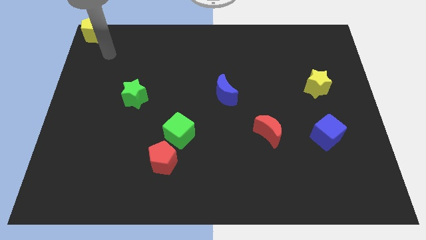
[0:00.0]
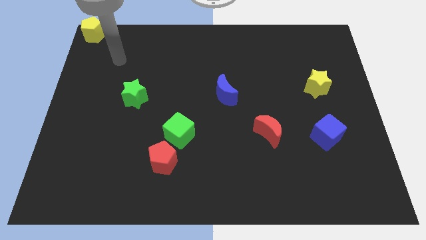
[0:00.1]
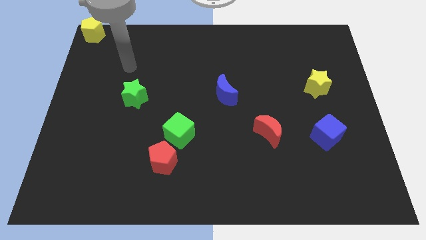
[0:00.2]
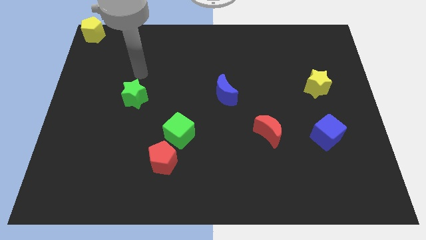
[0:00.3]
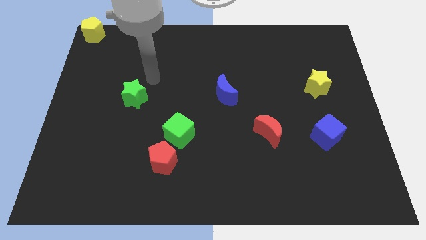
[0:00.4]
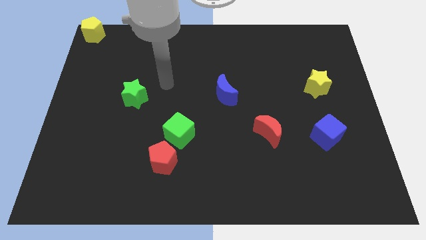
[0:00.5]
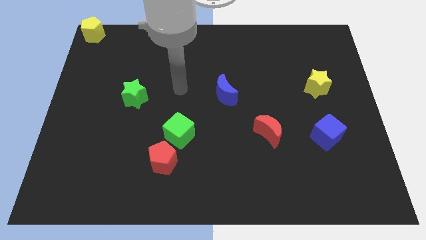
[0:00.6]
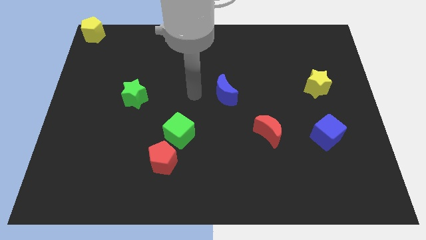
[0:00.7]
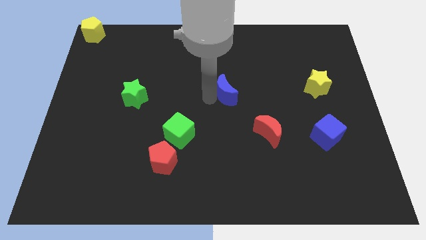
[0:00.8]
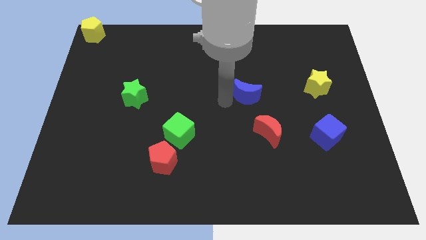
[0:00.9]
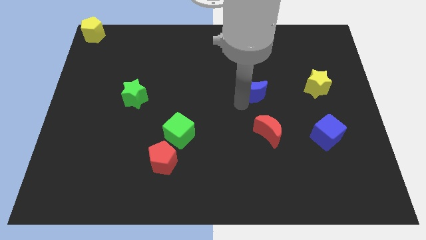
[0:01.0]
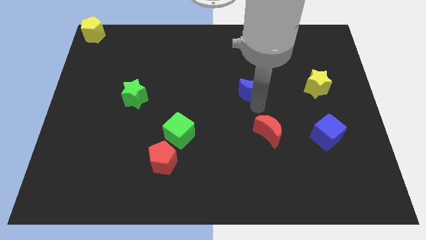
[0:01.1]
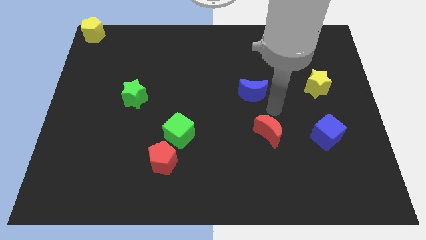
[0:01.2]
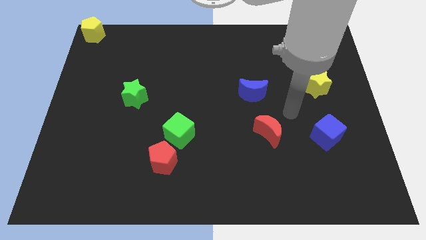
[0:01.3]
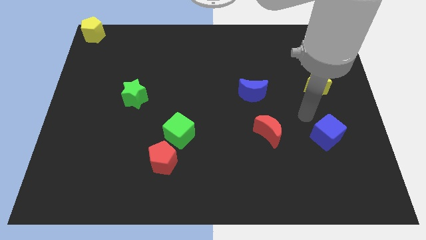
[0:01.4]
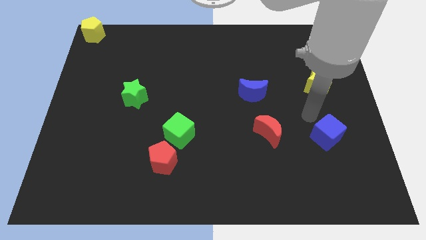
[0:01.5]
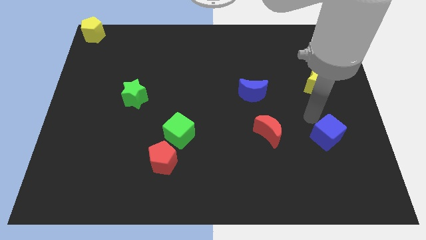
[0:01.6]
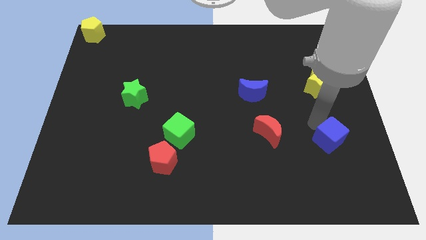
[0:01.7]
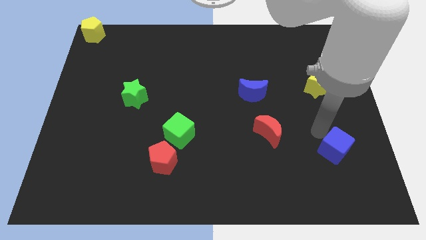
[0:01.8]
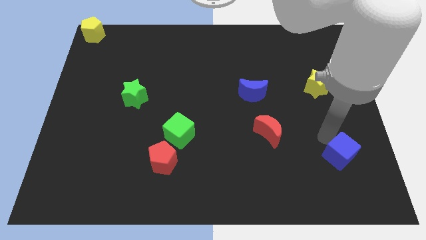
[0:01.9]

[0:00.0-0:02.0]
place your arm above blue cube

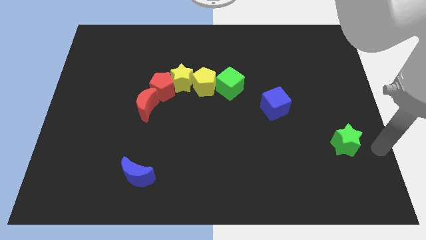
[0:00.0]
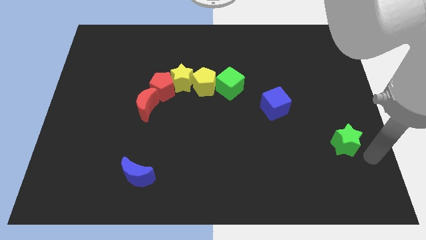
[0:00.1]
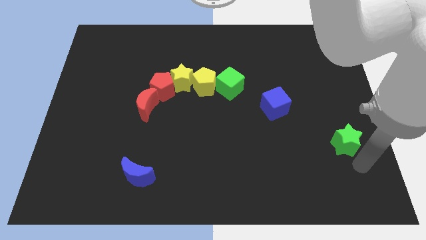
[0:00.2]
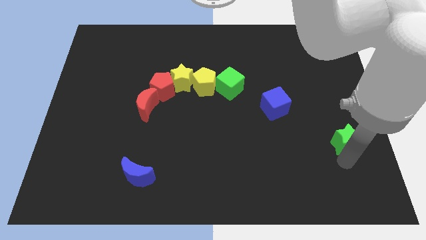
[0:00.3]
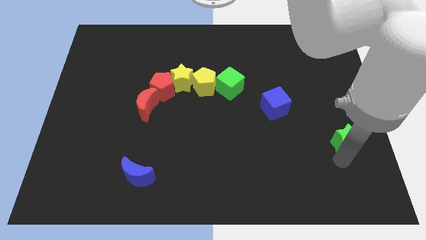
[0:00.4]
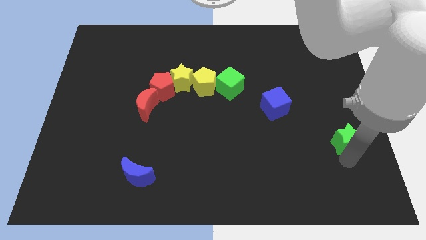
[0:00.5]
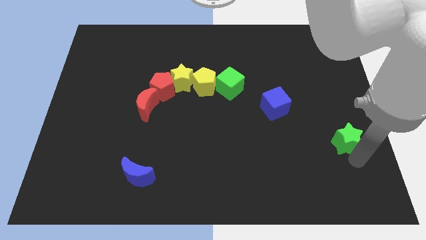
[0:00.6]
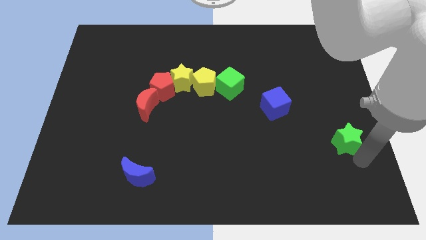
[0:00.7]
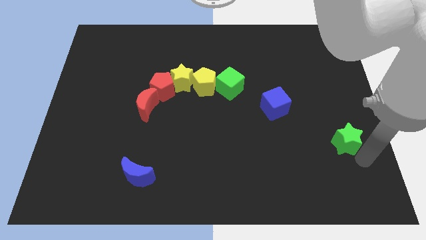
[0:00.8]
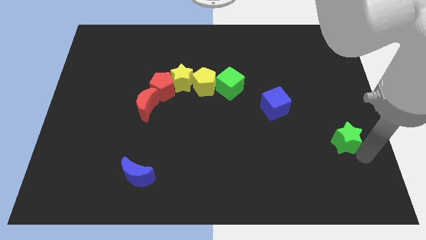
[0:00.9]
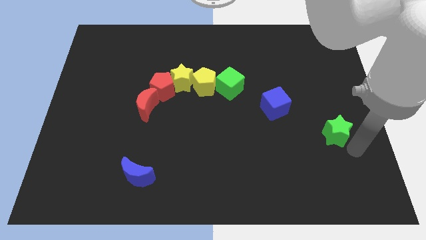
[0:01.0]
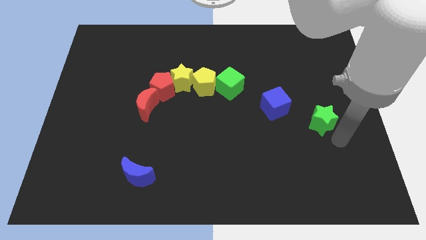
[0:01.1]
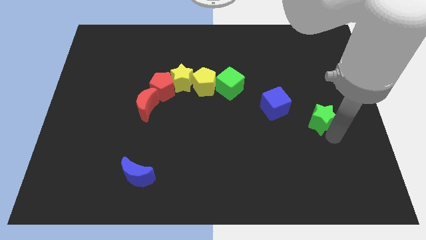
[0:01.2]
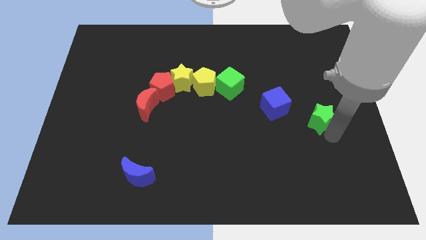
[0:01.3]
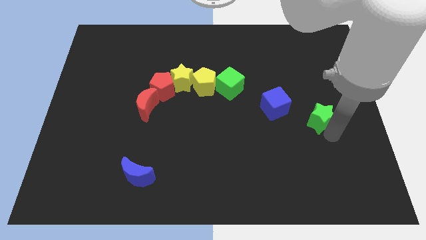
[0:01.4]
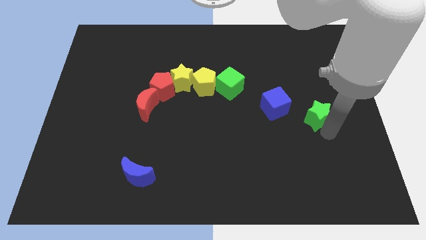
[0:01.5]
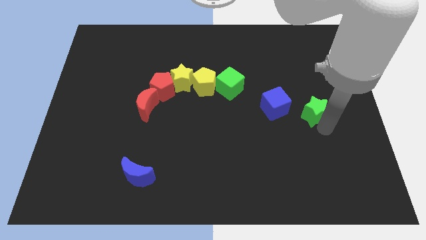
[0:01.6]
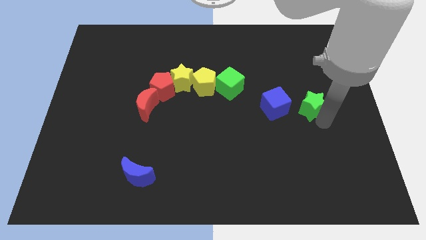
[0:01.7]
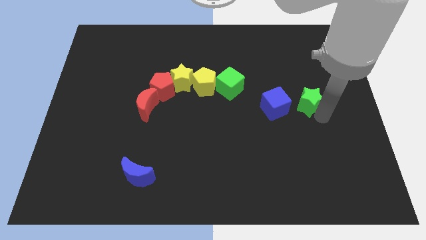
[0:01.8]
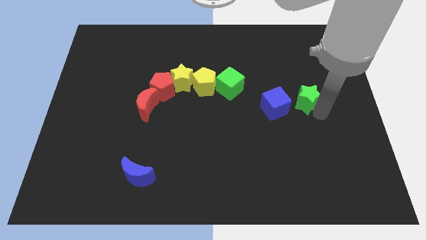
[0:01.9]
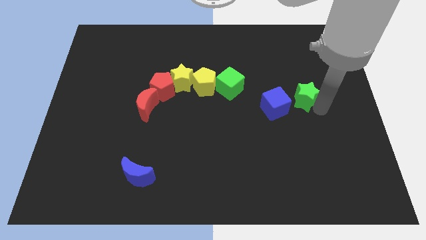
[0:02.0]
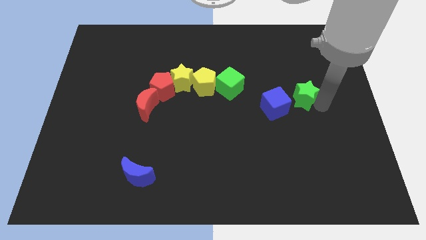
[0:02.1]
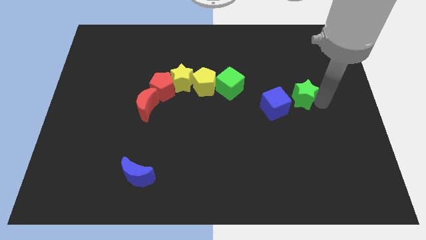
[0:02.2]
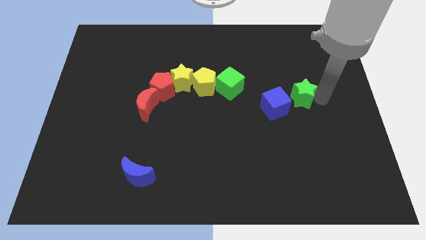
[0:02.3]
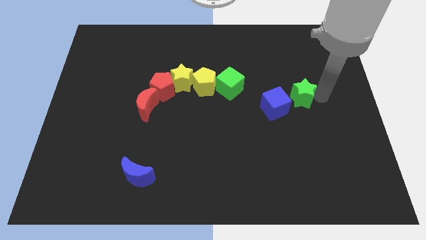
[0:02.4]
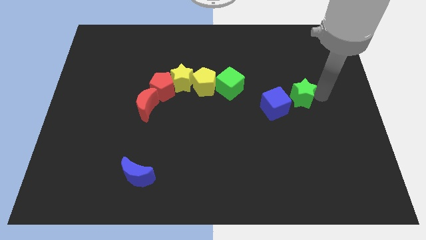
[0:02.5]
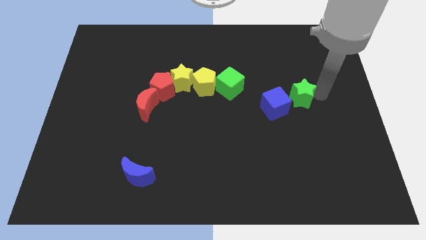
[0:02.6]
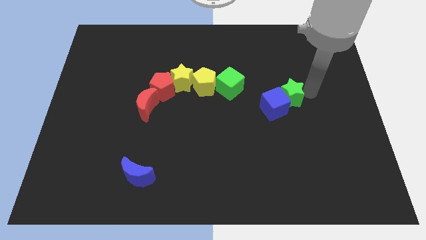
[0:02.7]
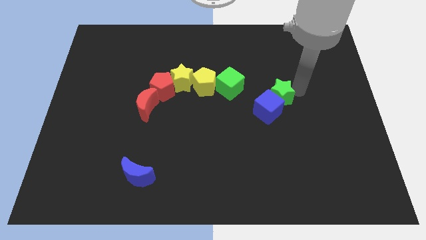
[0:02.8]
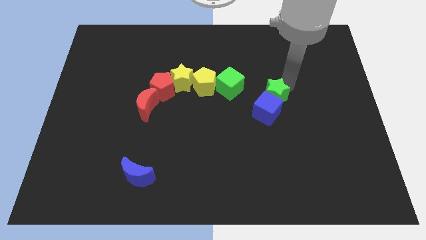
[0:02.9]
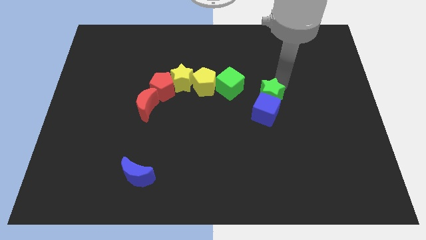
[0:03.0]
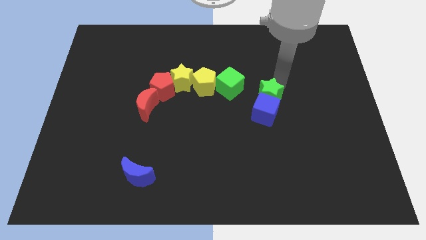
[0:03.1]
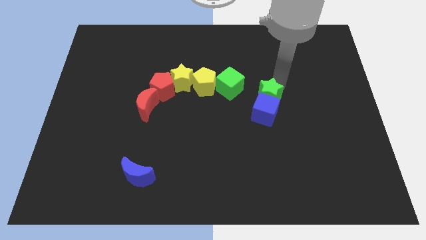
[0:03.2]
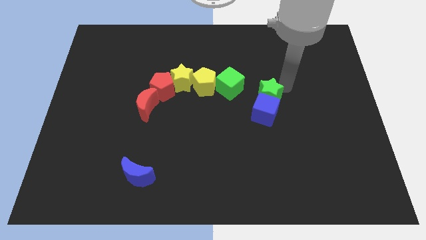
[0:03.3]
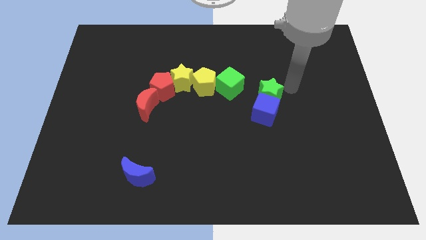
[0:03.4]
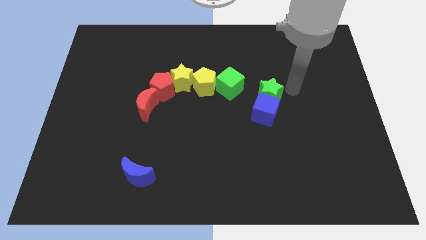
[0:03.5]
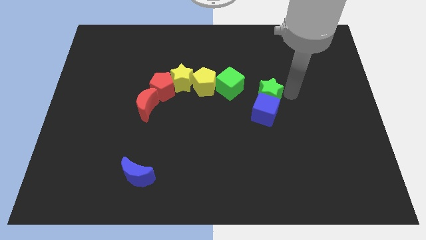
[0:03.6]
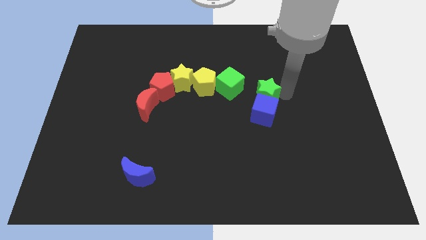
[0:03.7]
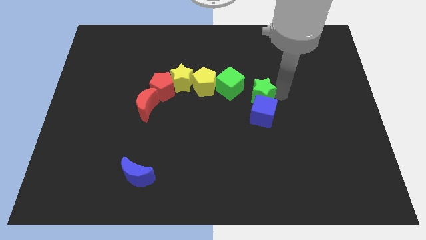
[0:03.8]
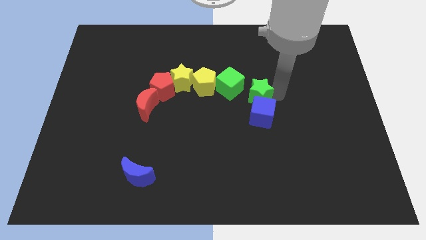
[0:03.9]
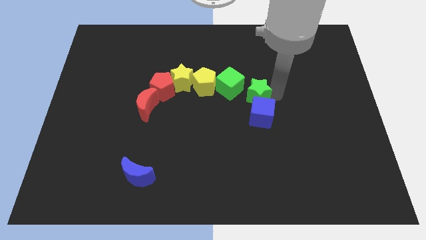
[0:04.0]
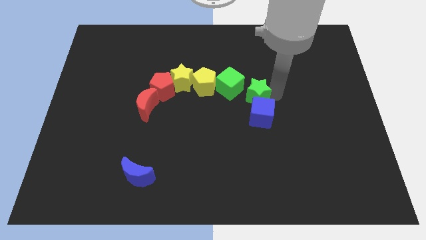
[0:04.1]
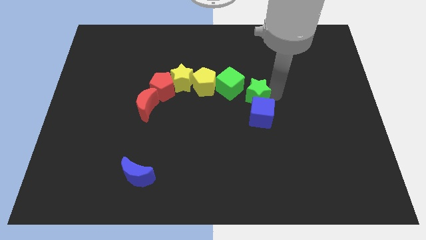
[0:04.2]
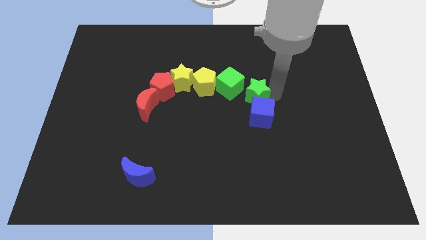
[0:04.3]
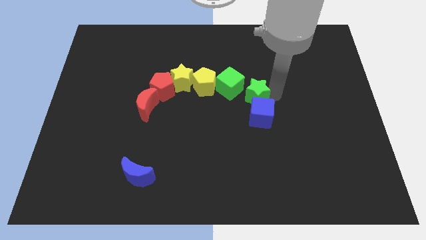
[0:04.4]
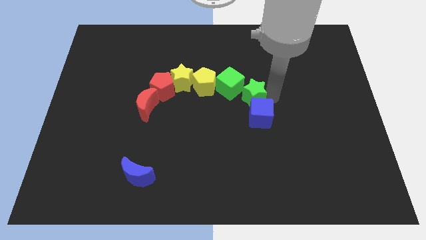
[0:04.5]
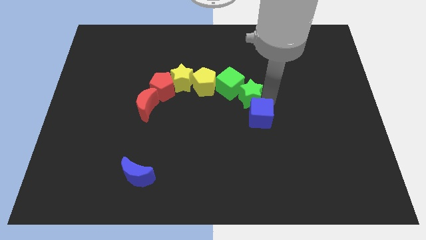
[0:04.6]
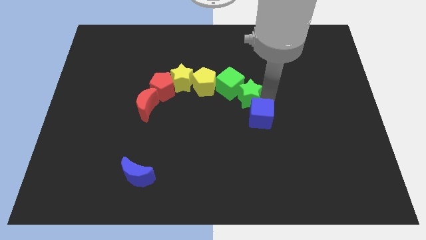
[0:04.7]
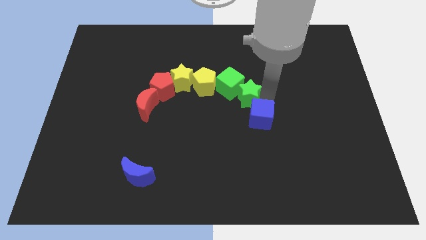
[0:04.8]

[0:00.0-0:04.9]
move the green star in between the green cube and blue cube

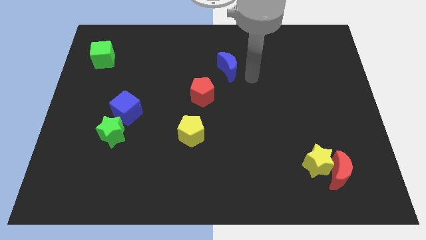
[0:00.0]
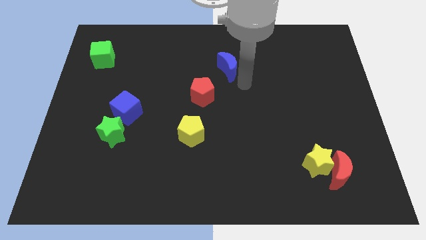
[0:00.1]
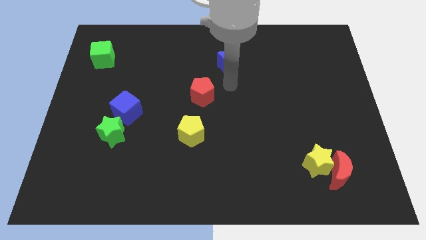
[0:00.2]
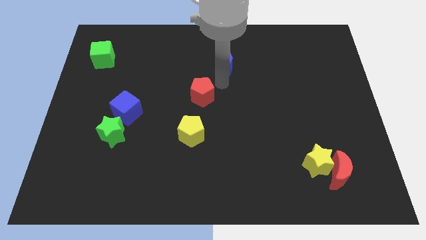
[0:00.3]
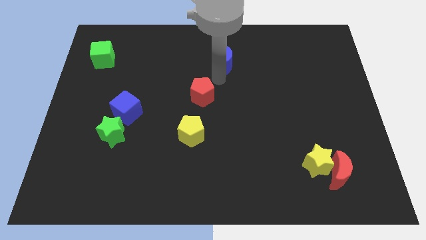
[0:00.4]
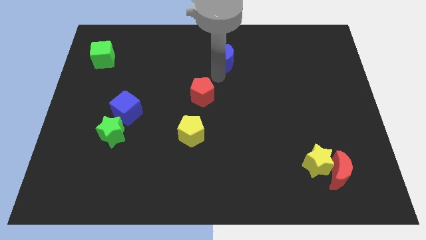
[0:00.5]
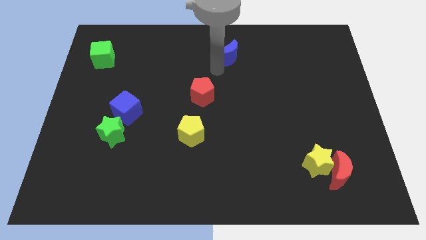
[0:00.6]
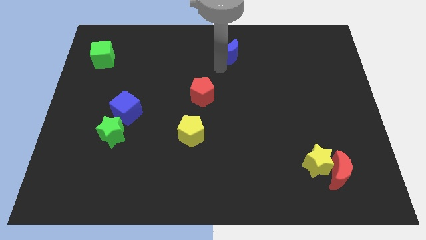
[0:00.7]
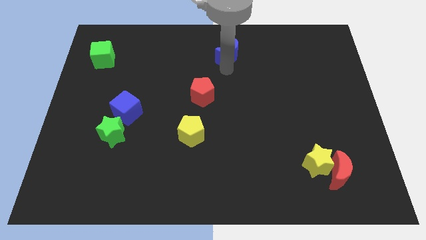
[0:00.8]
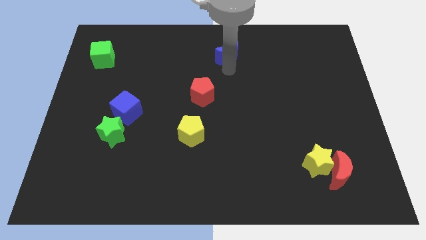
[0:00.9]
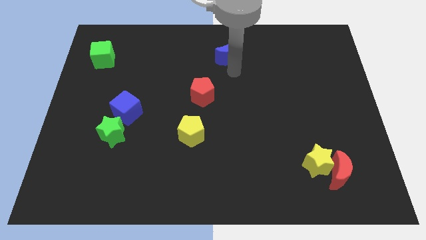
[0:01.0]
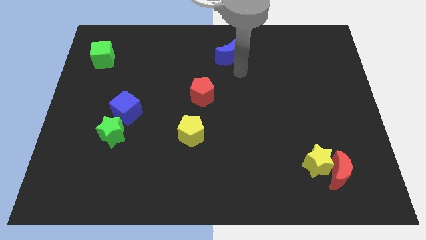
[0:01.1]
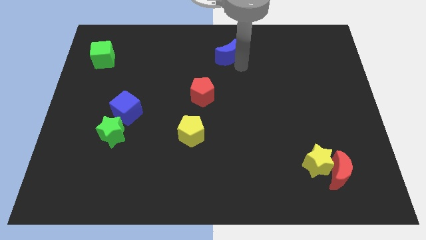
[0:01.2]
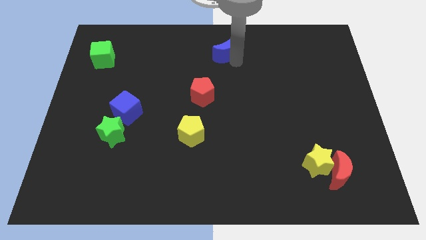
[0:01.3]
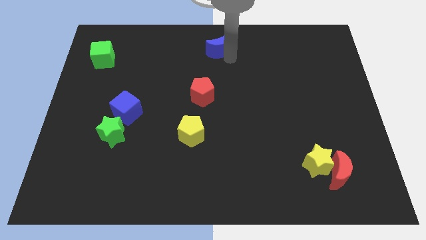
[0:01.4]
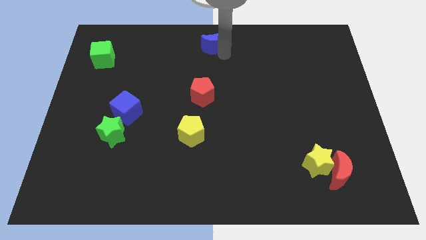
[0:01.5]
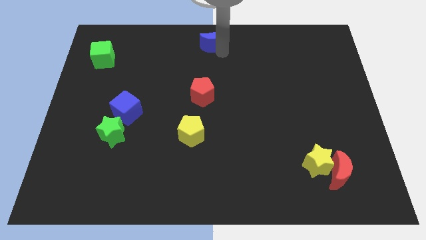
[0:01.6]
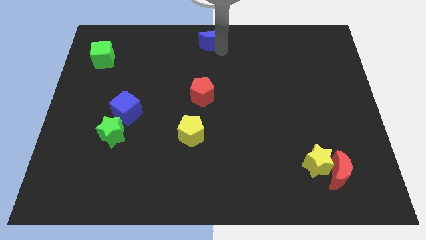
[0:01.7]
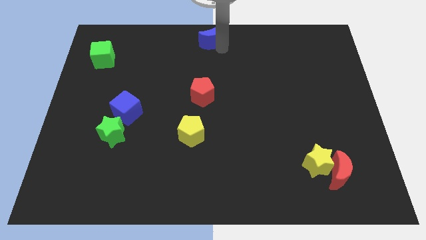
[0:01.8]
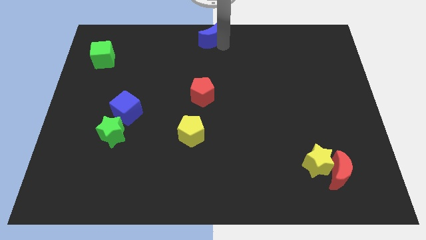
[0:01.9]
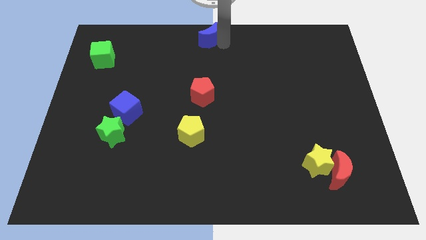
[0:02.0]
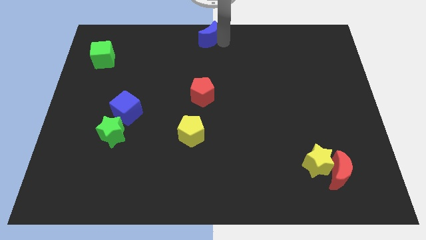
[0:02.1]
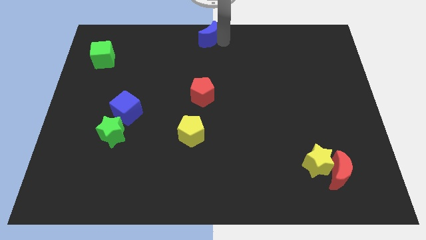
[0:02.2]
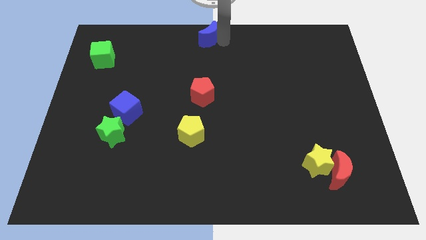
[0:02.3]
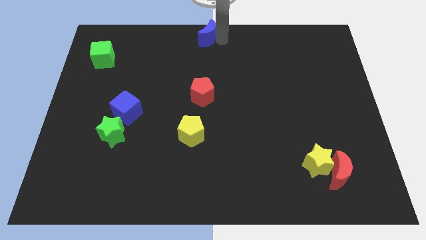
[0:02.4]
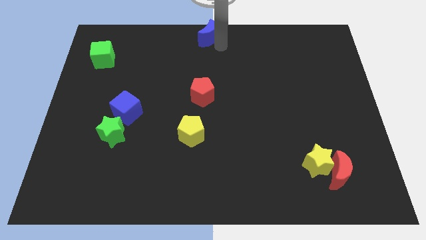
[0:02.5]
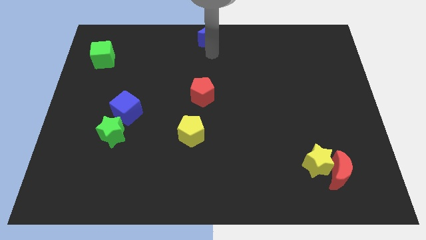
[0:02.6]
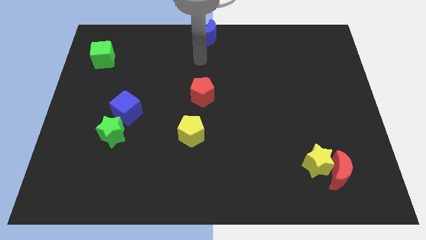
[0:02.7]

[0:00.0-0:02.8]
put the blue moon vertically at the top side of the red pentagon
